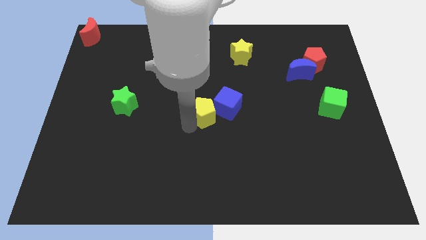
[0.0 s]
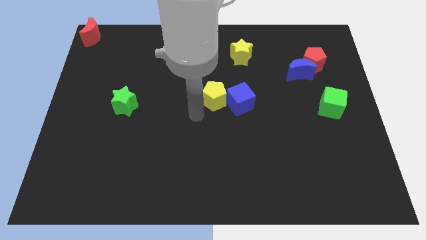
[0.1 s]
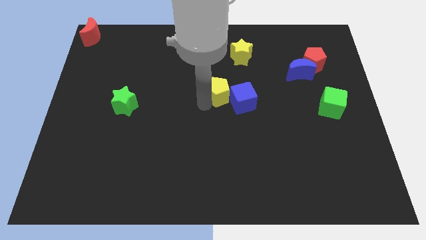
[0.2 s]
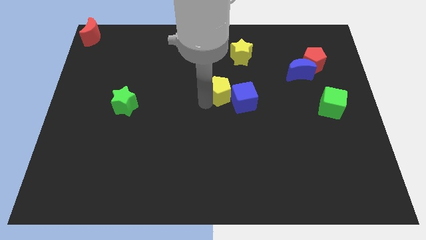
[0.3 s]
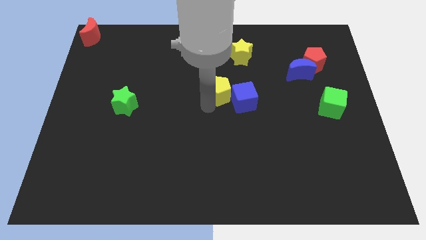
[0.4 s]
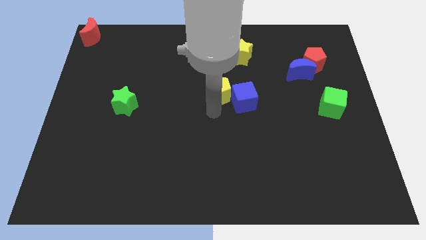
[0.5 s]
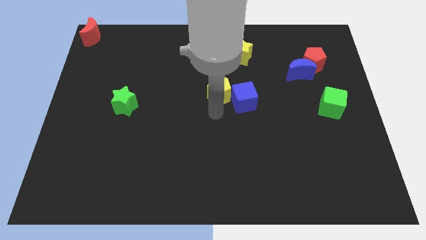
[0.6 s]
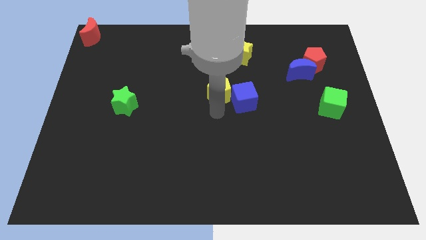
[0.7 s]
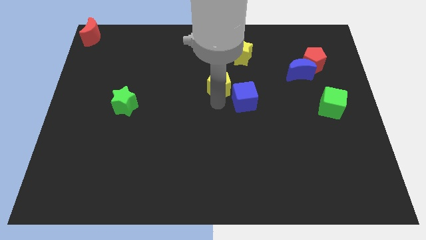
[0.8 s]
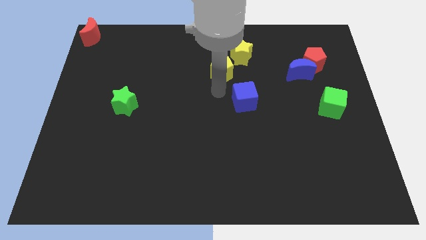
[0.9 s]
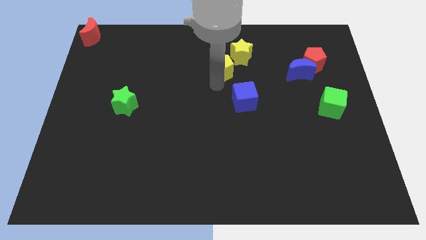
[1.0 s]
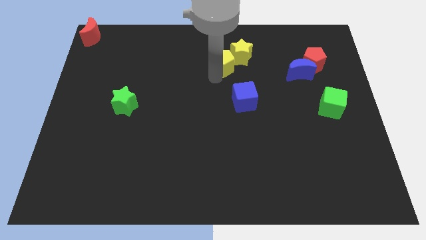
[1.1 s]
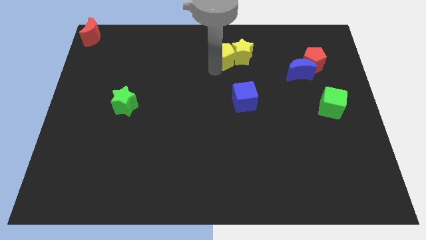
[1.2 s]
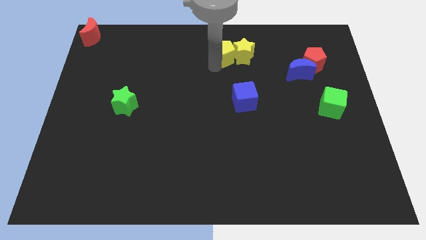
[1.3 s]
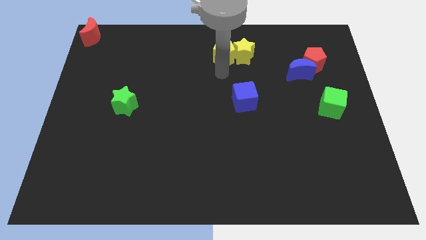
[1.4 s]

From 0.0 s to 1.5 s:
place the yellow pentagon at the left side of the yellow star

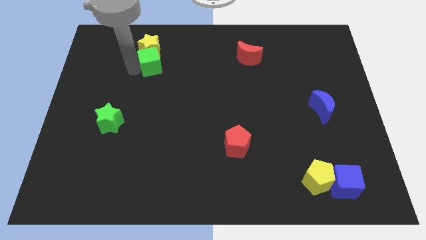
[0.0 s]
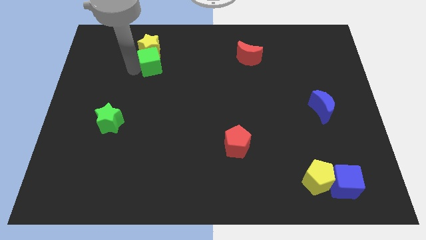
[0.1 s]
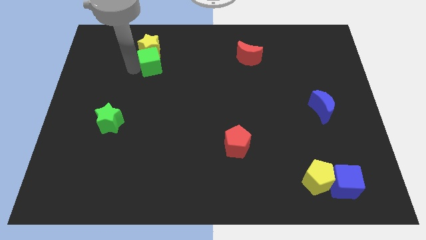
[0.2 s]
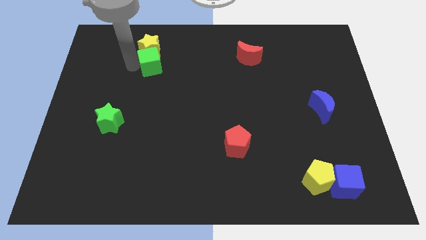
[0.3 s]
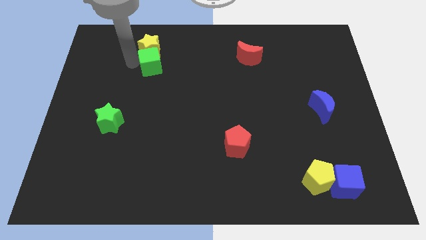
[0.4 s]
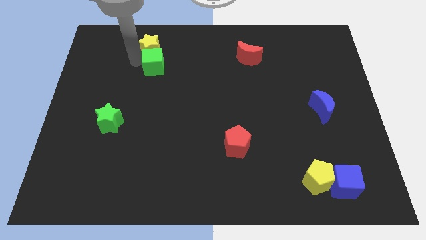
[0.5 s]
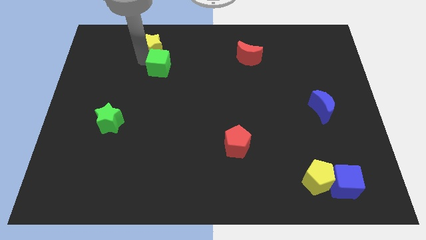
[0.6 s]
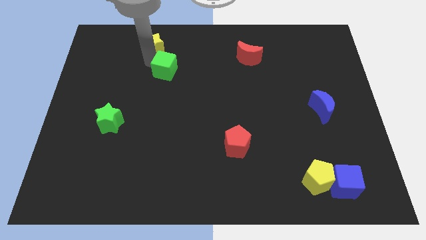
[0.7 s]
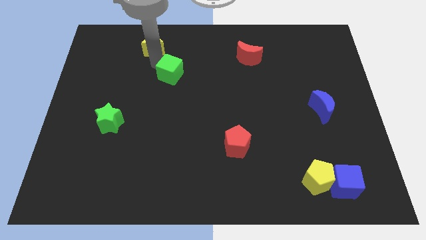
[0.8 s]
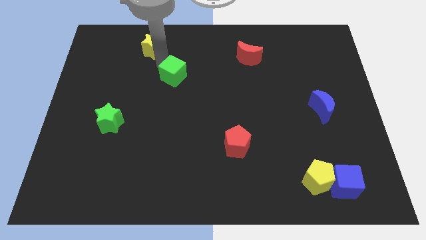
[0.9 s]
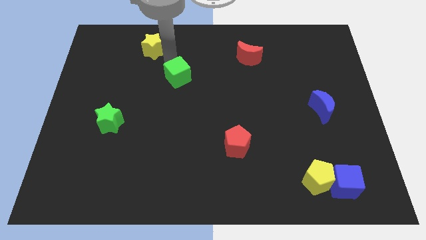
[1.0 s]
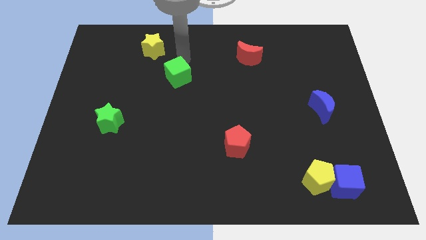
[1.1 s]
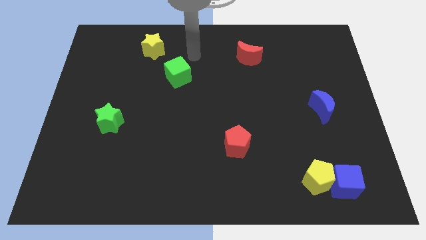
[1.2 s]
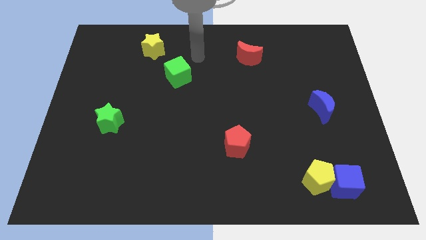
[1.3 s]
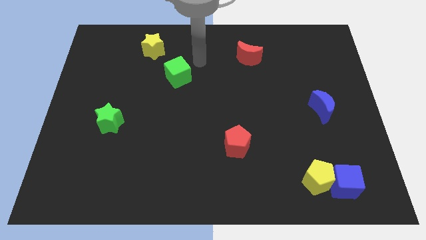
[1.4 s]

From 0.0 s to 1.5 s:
separate green cube and yellow star

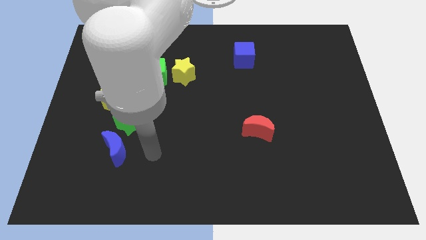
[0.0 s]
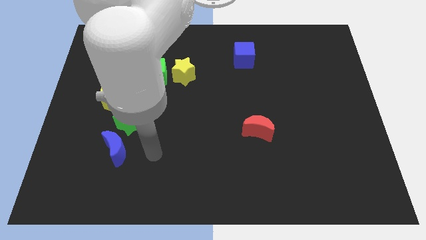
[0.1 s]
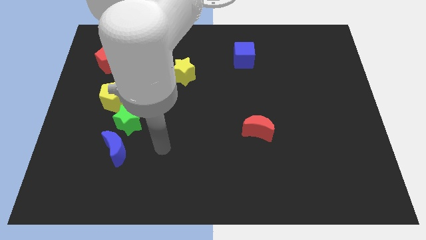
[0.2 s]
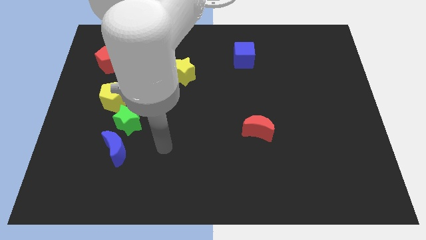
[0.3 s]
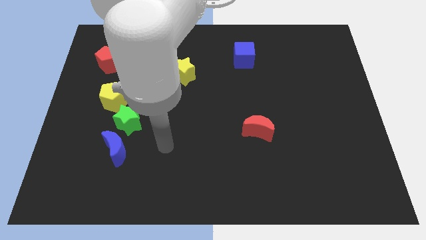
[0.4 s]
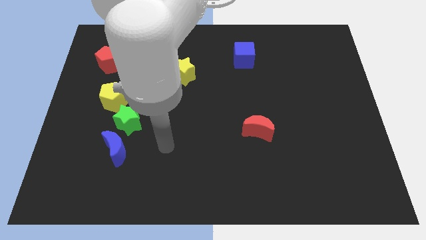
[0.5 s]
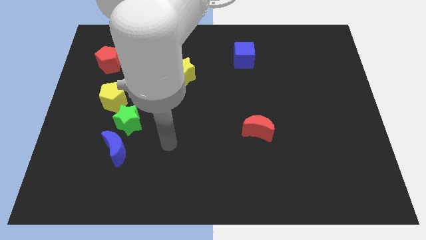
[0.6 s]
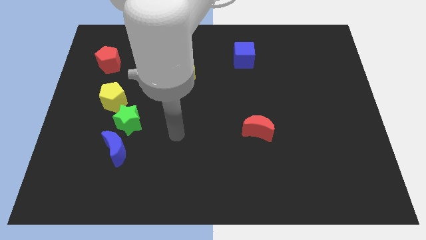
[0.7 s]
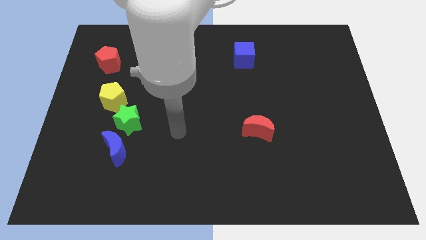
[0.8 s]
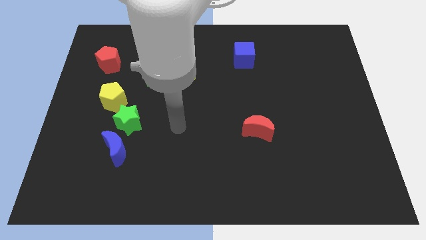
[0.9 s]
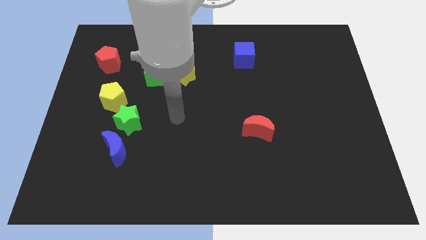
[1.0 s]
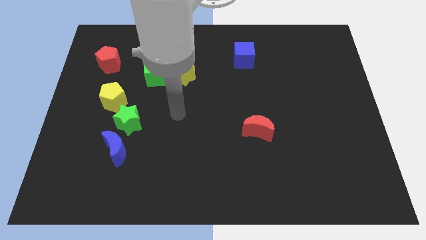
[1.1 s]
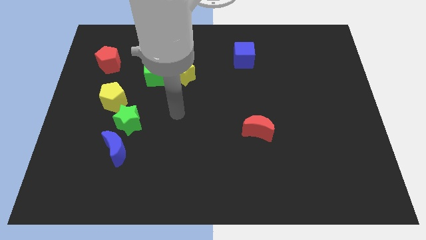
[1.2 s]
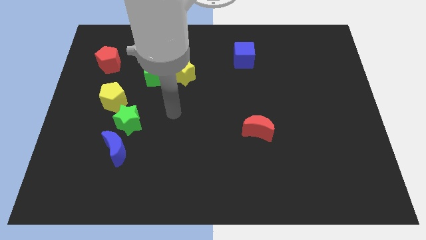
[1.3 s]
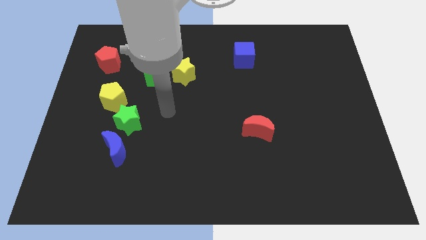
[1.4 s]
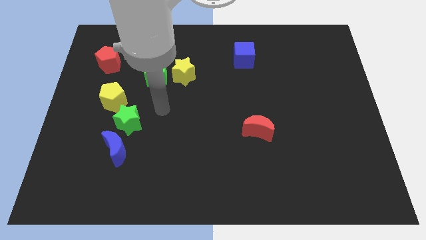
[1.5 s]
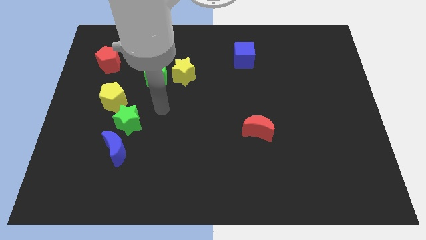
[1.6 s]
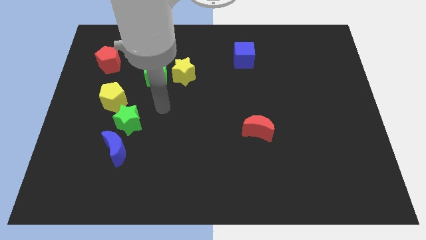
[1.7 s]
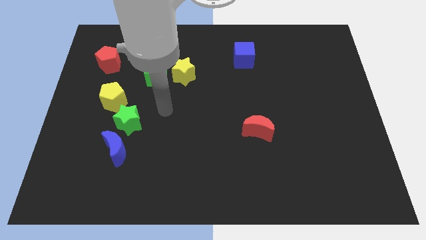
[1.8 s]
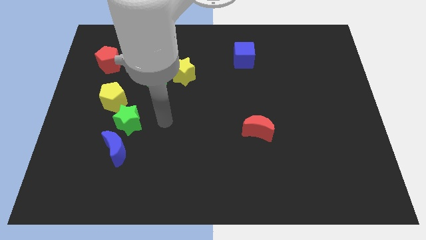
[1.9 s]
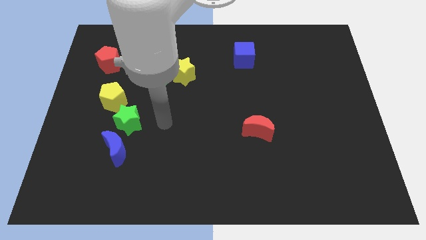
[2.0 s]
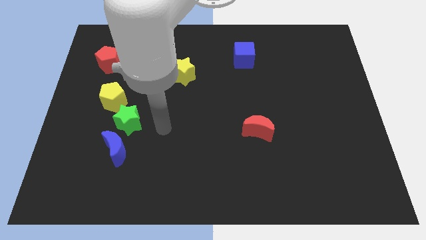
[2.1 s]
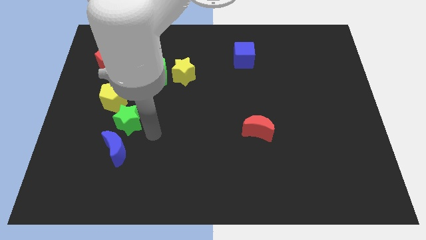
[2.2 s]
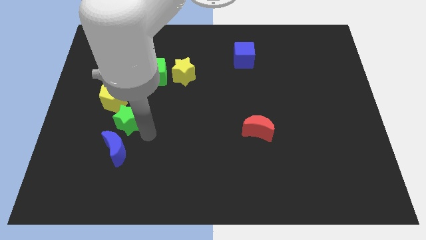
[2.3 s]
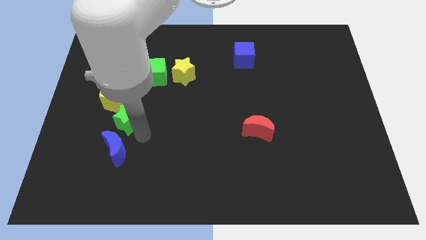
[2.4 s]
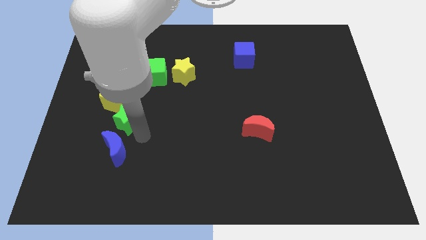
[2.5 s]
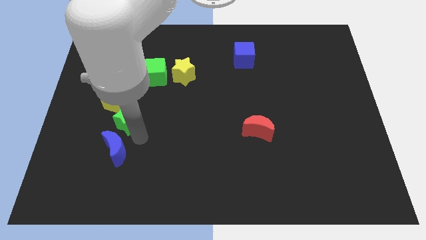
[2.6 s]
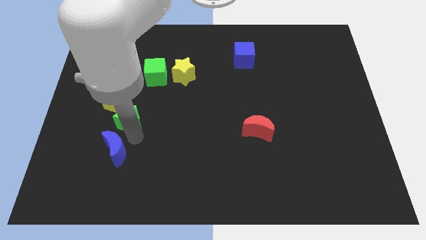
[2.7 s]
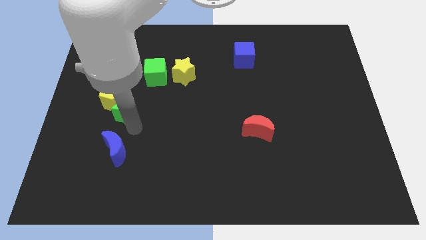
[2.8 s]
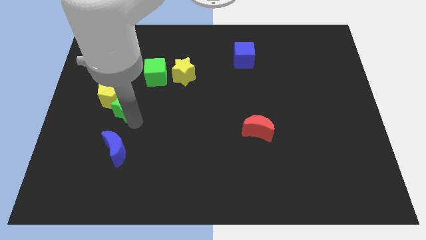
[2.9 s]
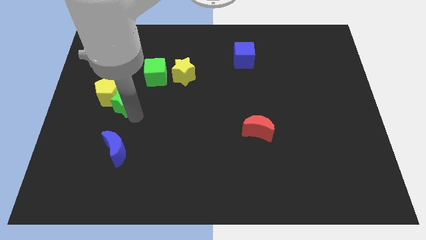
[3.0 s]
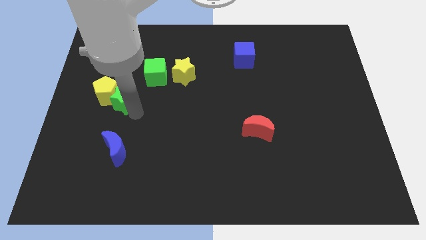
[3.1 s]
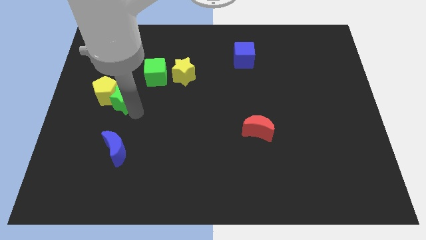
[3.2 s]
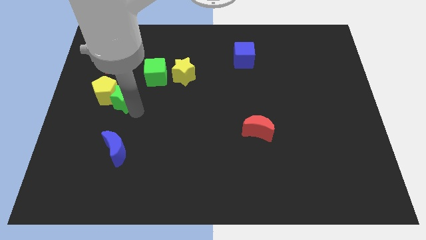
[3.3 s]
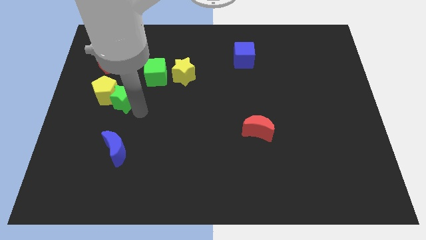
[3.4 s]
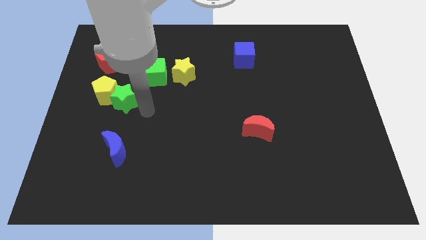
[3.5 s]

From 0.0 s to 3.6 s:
push the yellow pentagon and green star to left center of the board

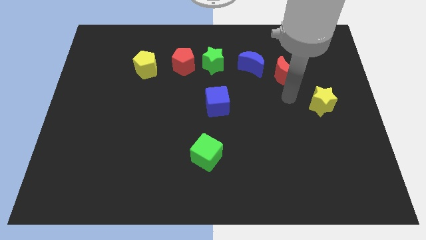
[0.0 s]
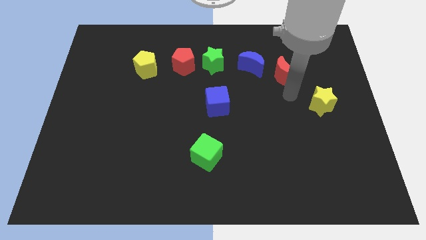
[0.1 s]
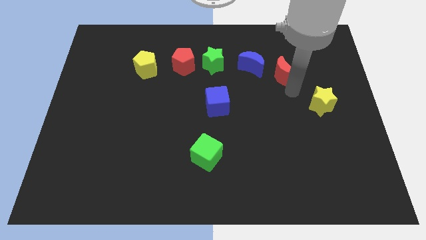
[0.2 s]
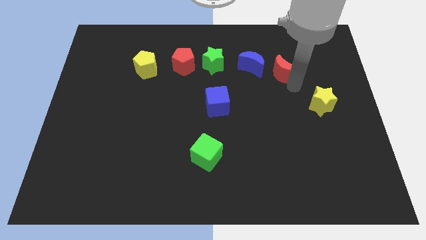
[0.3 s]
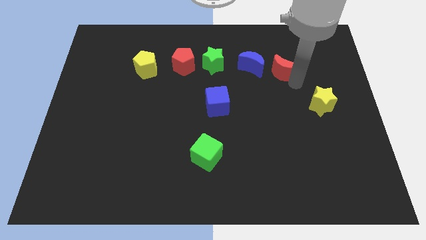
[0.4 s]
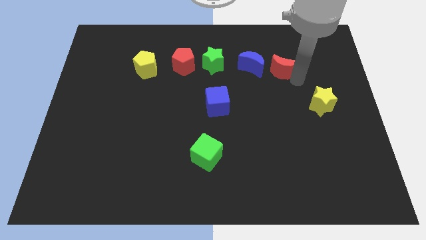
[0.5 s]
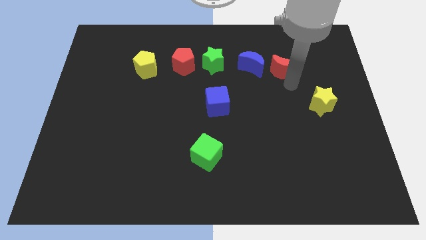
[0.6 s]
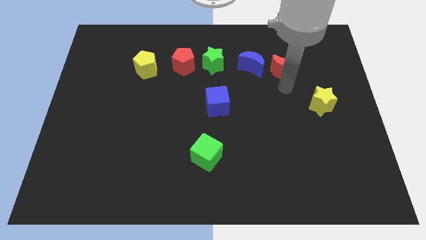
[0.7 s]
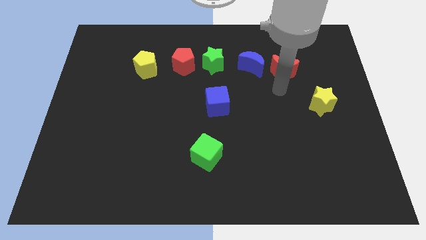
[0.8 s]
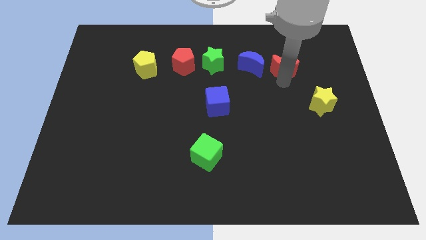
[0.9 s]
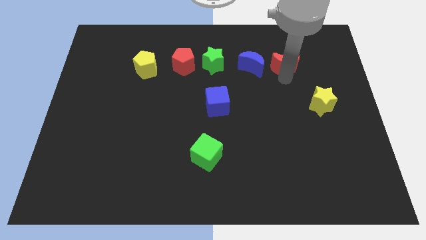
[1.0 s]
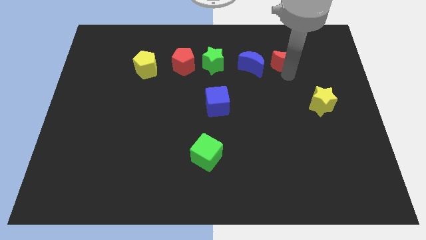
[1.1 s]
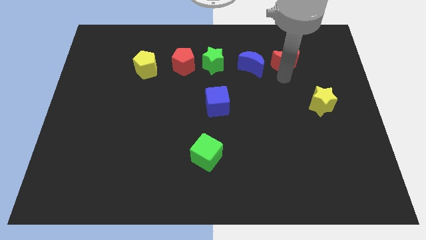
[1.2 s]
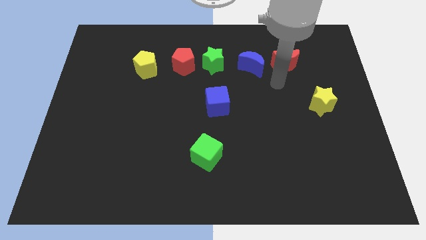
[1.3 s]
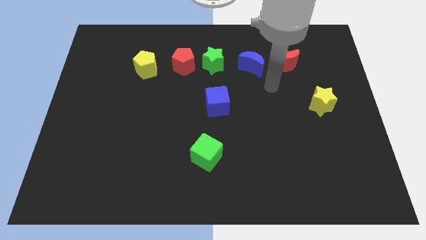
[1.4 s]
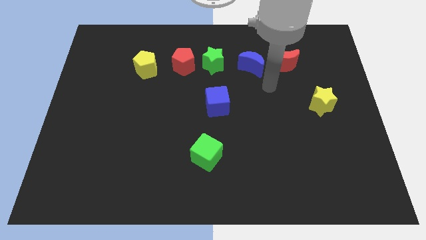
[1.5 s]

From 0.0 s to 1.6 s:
adjust the red crescent to the right of the blue moon

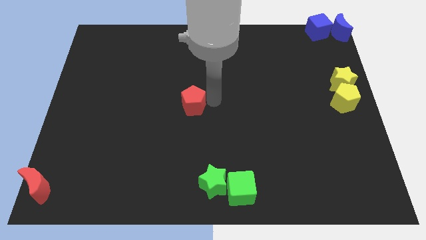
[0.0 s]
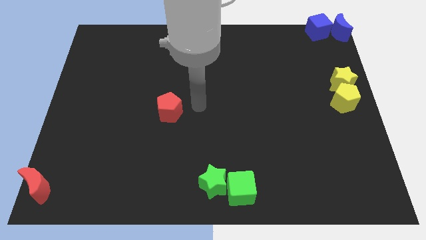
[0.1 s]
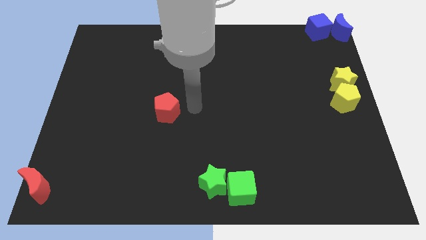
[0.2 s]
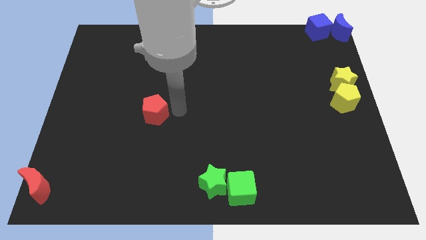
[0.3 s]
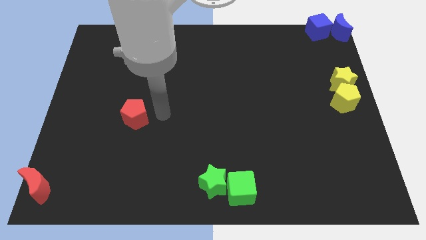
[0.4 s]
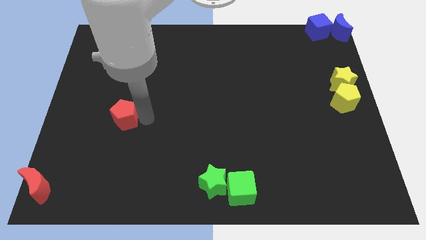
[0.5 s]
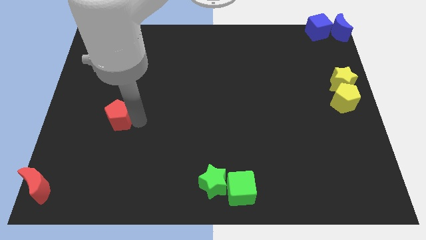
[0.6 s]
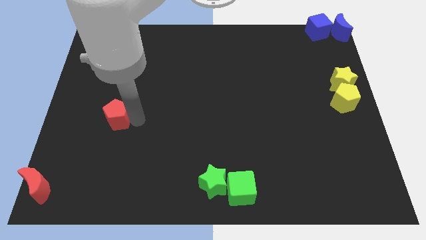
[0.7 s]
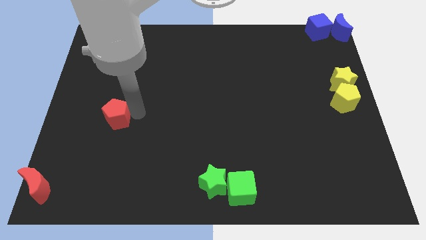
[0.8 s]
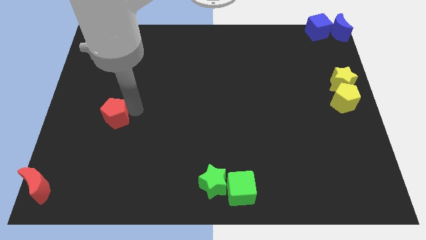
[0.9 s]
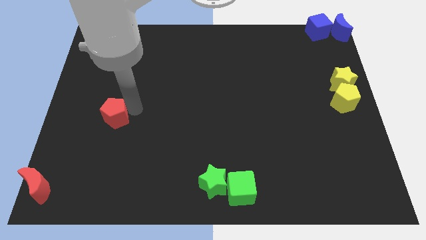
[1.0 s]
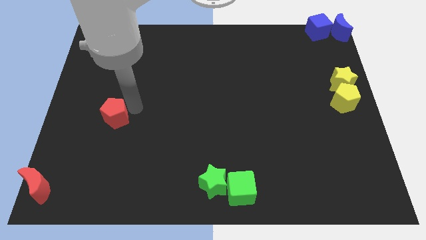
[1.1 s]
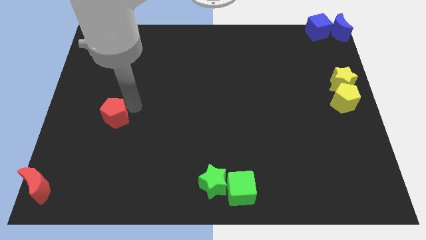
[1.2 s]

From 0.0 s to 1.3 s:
push red pentagon towards red crescent
